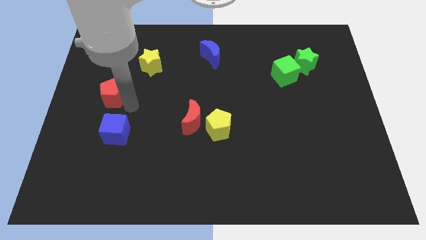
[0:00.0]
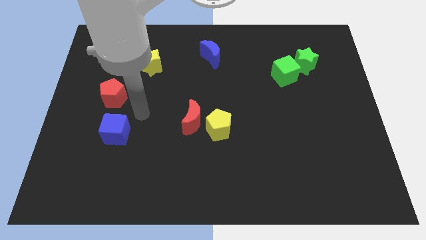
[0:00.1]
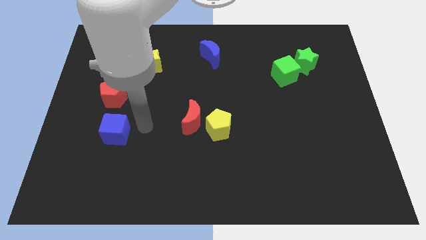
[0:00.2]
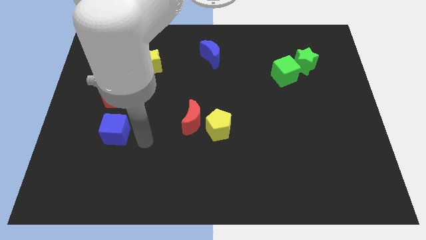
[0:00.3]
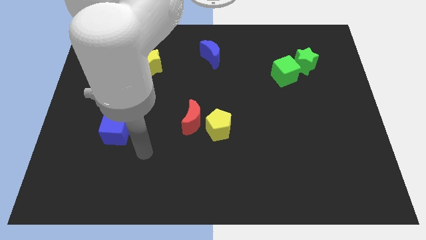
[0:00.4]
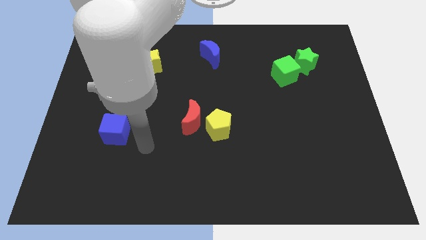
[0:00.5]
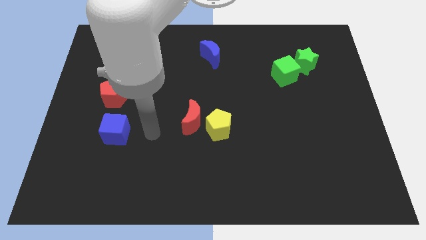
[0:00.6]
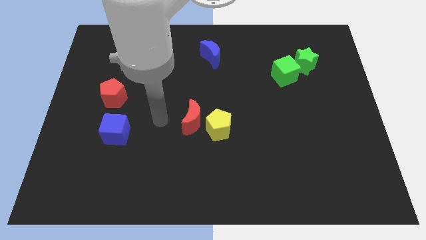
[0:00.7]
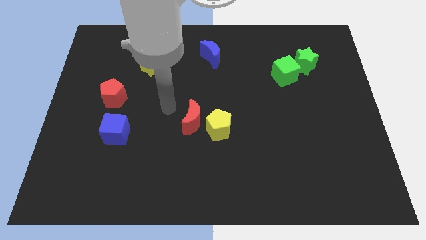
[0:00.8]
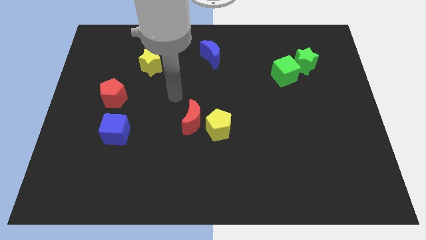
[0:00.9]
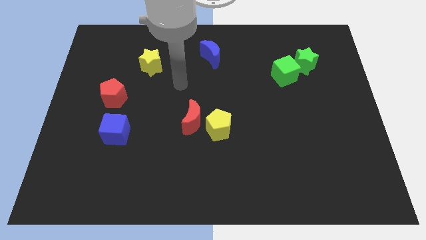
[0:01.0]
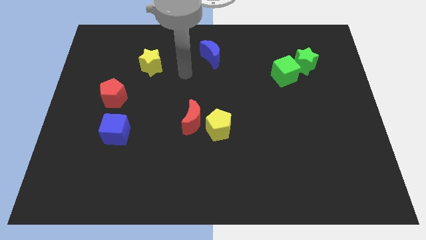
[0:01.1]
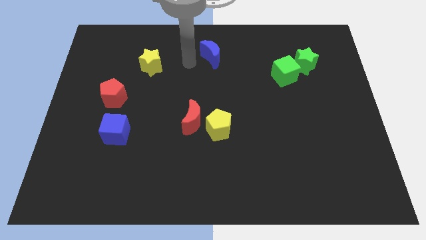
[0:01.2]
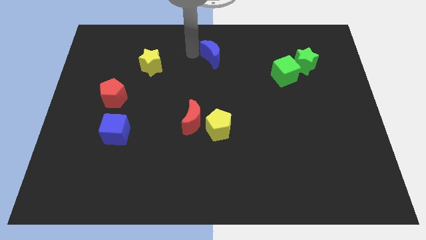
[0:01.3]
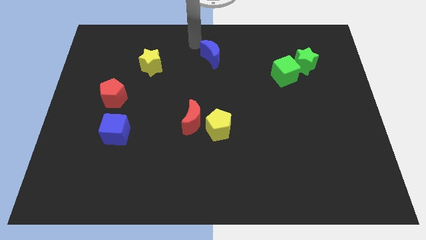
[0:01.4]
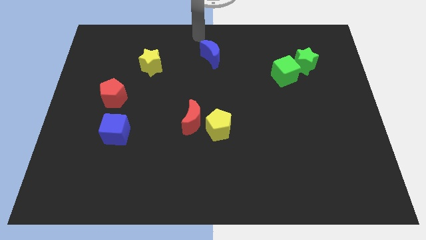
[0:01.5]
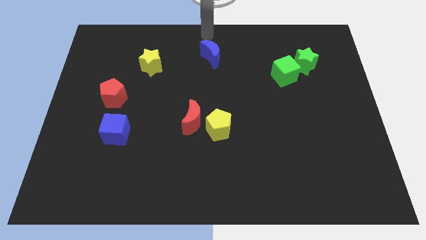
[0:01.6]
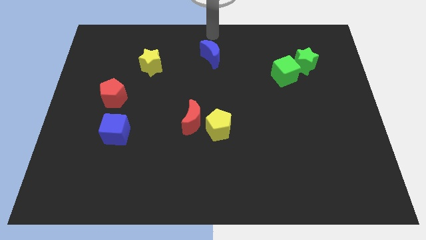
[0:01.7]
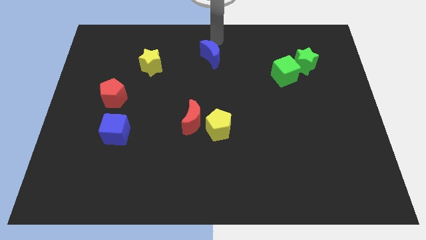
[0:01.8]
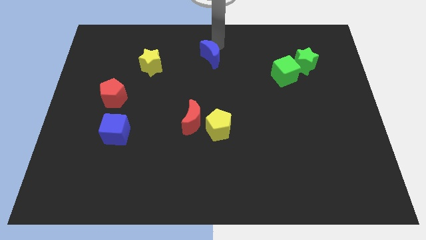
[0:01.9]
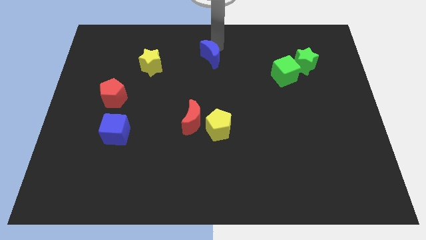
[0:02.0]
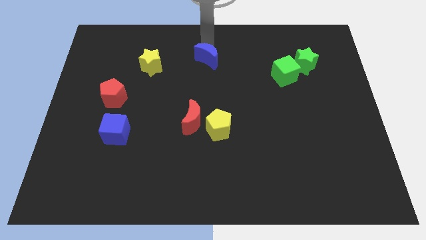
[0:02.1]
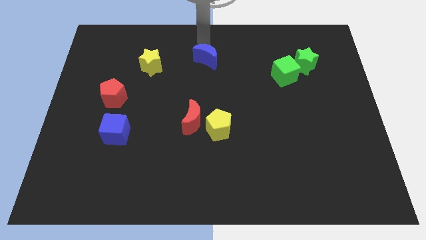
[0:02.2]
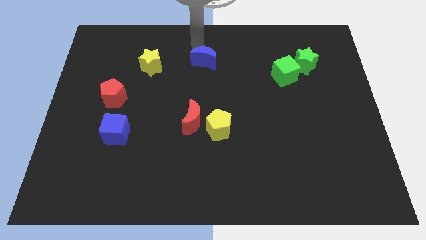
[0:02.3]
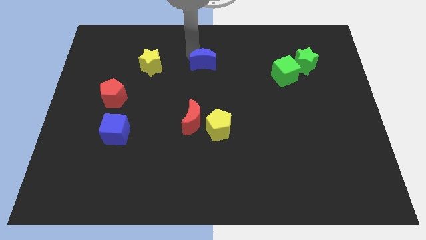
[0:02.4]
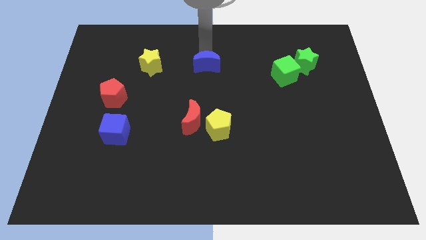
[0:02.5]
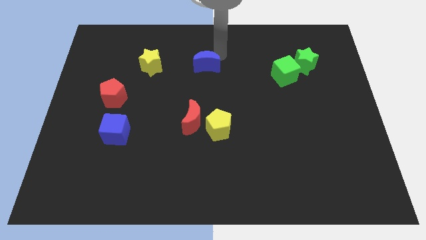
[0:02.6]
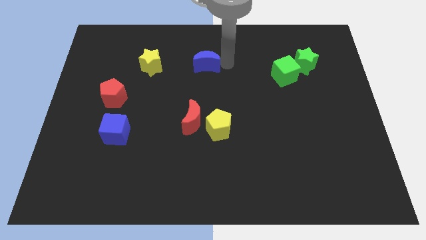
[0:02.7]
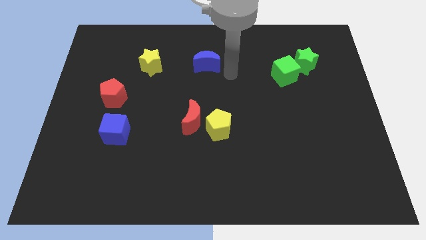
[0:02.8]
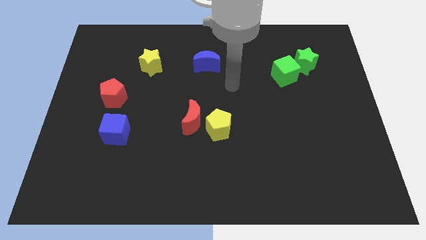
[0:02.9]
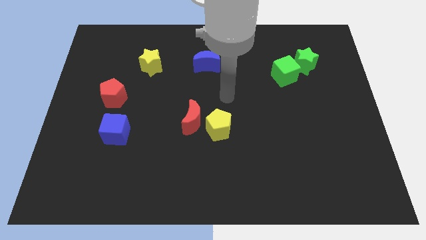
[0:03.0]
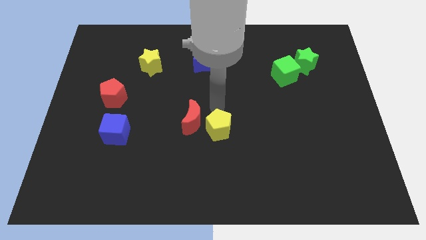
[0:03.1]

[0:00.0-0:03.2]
slide the blue crescent slightly towards down

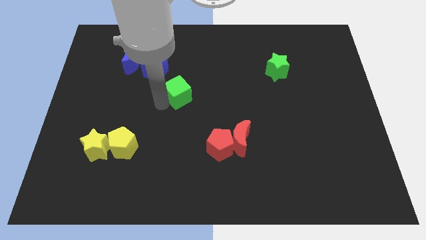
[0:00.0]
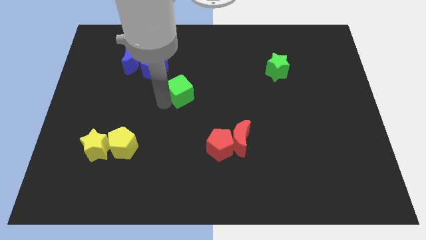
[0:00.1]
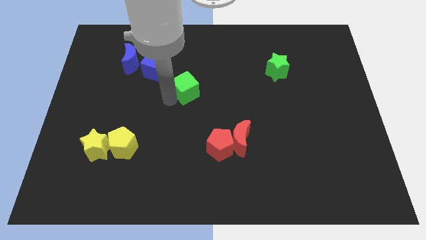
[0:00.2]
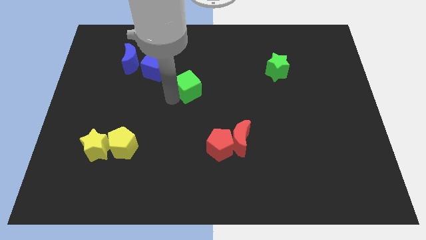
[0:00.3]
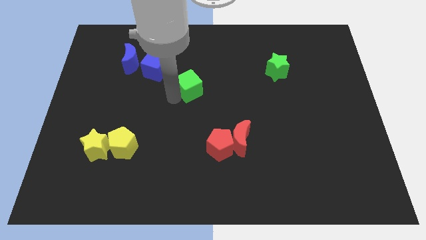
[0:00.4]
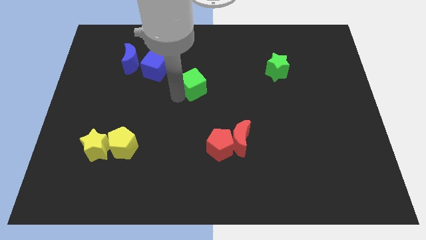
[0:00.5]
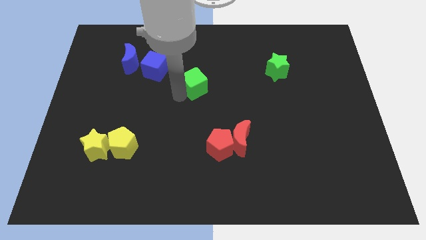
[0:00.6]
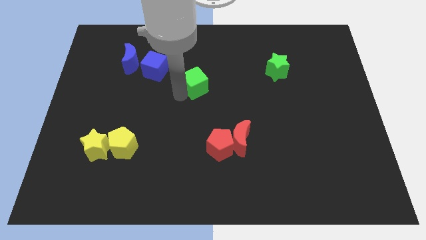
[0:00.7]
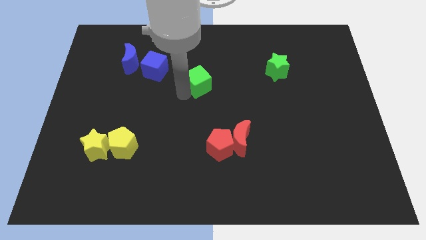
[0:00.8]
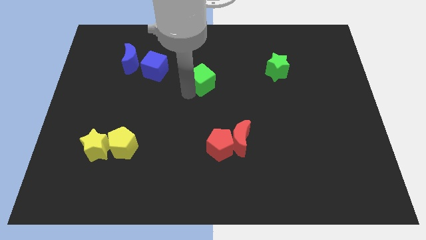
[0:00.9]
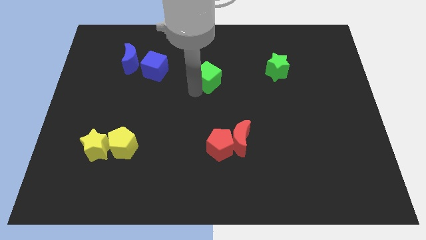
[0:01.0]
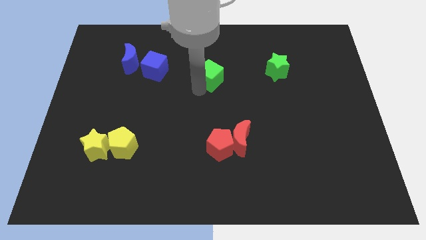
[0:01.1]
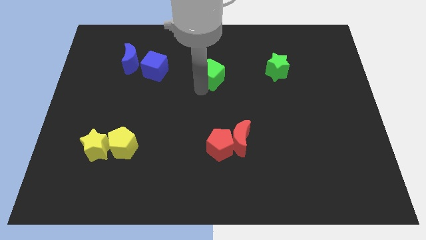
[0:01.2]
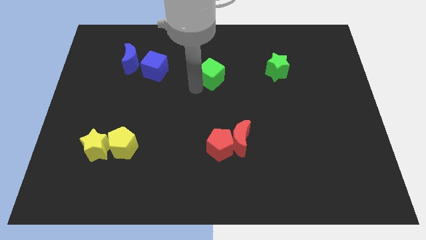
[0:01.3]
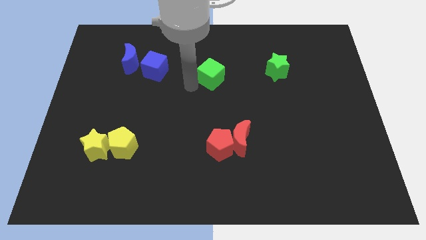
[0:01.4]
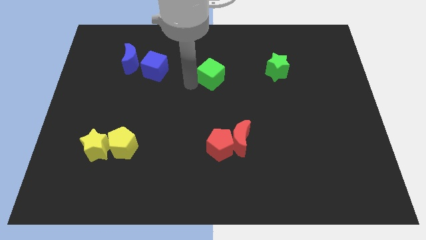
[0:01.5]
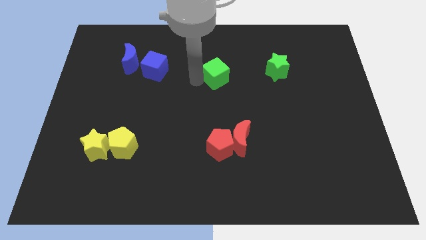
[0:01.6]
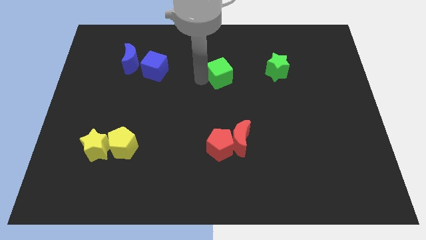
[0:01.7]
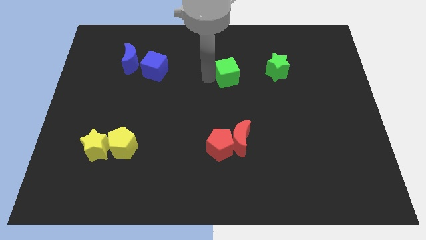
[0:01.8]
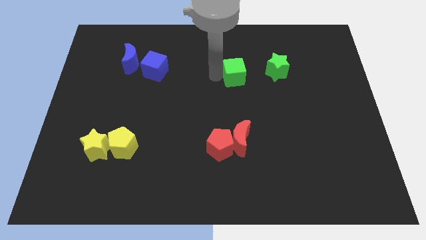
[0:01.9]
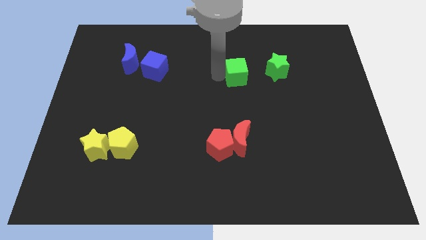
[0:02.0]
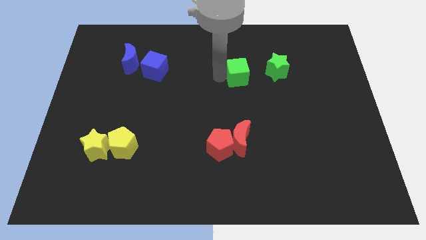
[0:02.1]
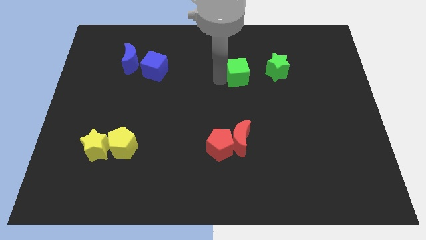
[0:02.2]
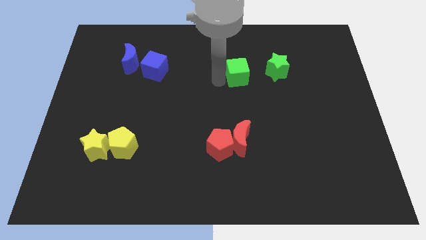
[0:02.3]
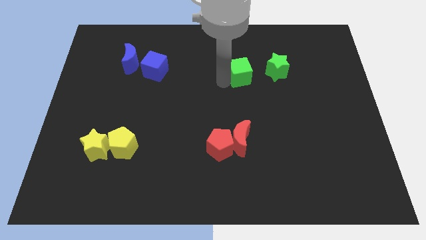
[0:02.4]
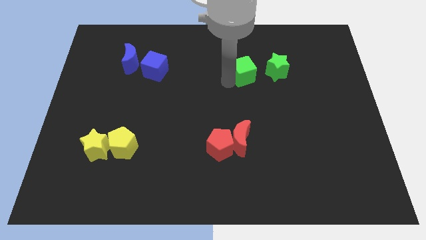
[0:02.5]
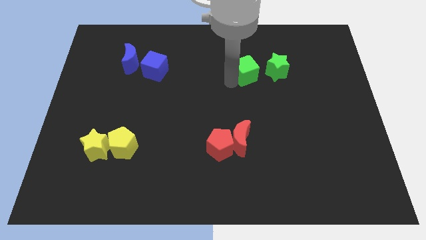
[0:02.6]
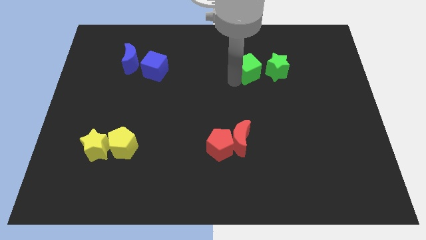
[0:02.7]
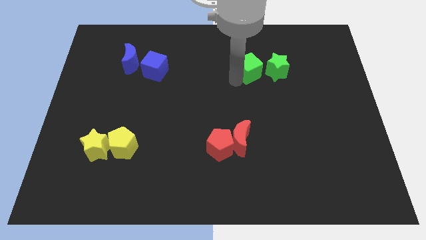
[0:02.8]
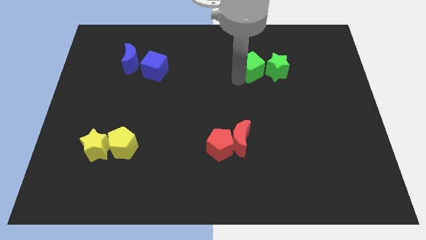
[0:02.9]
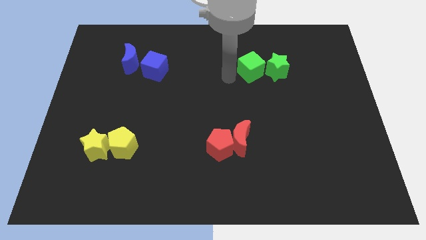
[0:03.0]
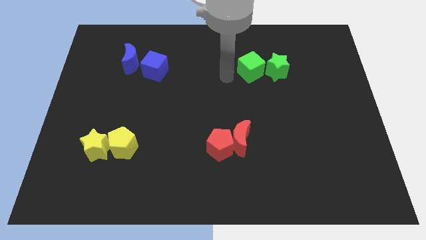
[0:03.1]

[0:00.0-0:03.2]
move the green cube to the left of green star

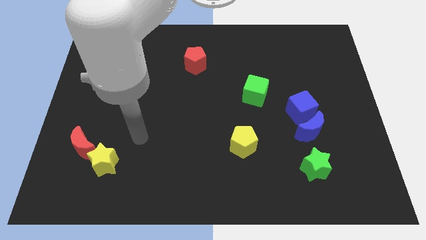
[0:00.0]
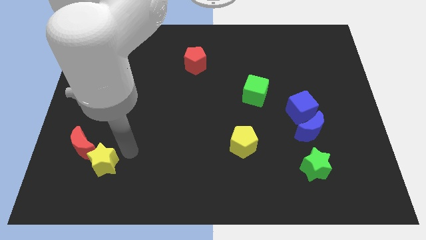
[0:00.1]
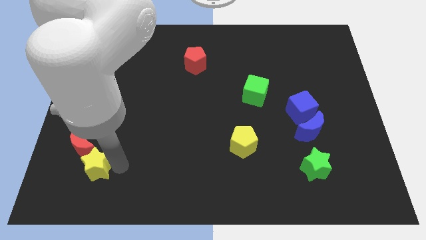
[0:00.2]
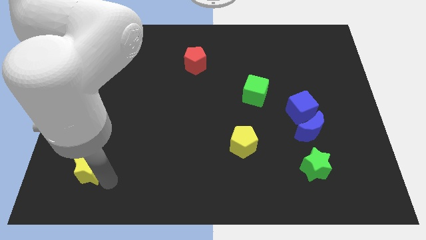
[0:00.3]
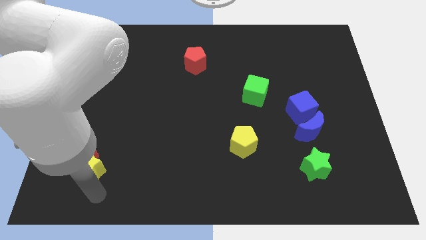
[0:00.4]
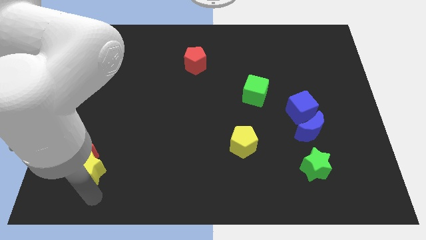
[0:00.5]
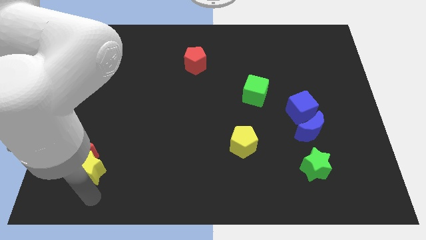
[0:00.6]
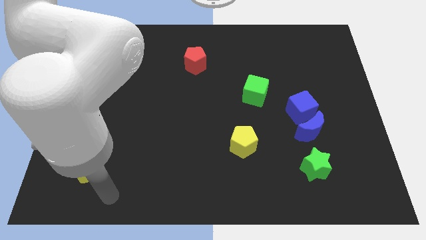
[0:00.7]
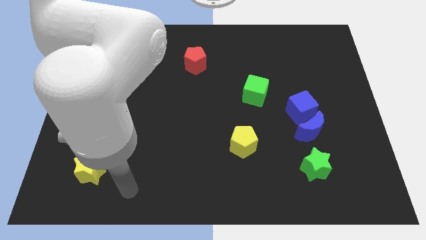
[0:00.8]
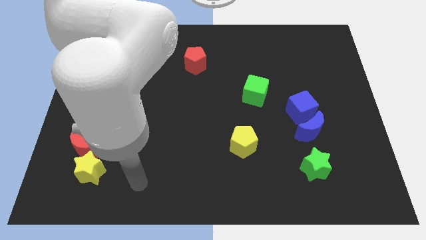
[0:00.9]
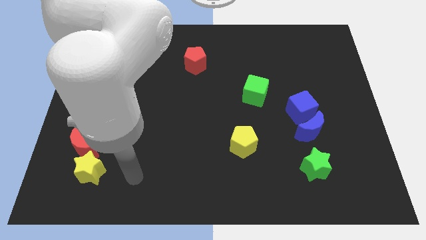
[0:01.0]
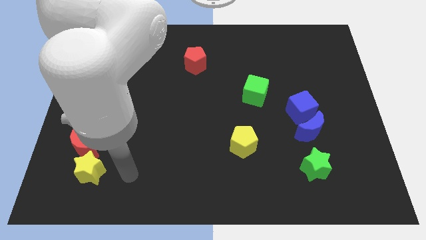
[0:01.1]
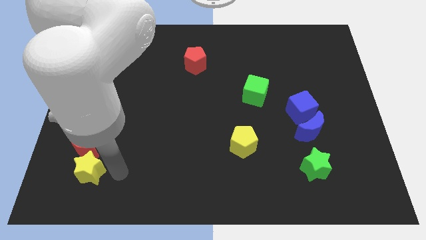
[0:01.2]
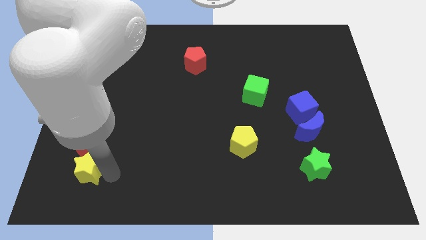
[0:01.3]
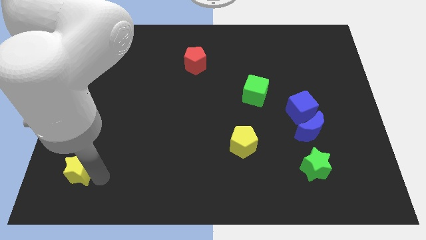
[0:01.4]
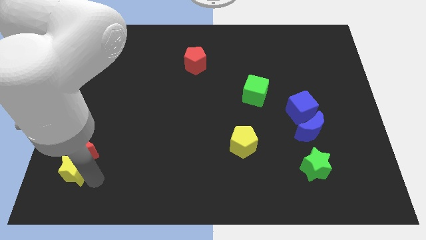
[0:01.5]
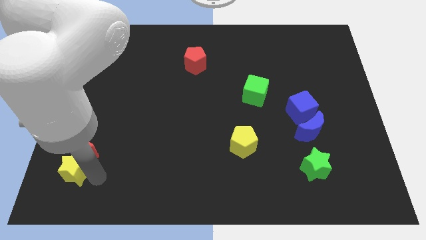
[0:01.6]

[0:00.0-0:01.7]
slightly move the yellow star to the left side of the board

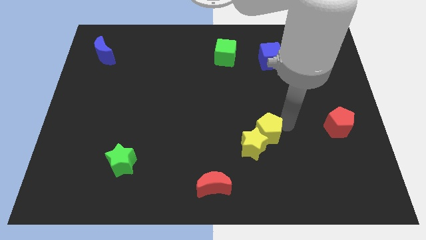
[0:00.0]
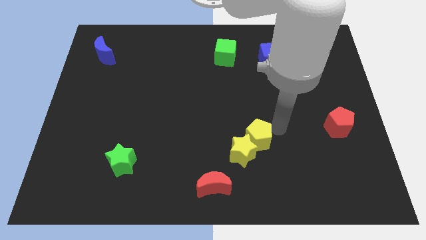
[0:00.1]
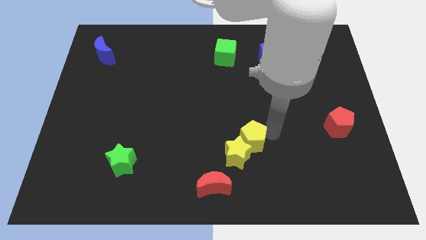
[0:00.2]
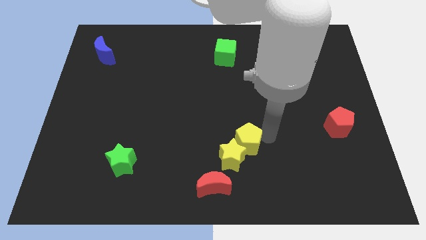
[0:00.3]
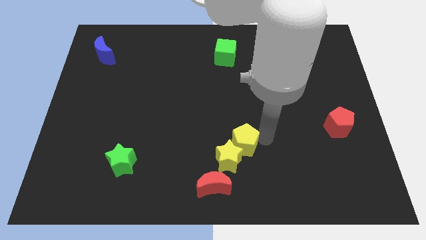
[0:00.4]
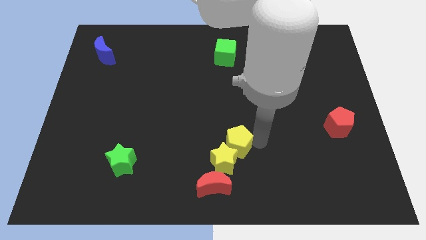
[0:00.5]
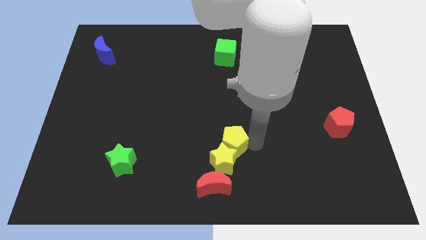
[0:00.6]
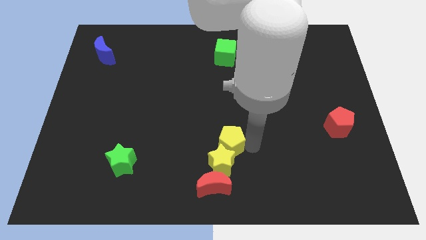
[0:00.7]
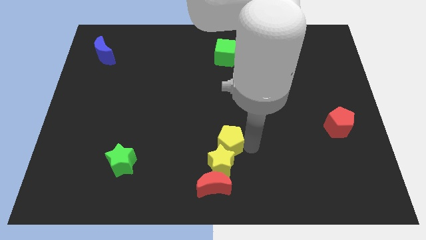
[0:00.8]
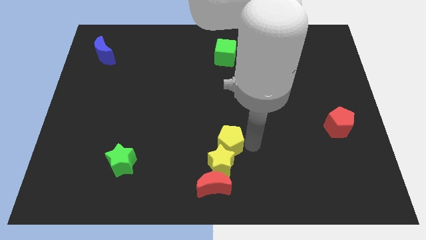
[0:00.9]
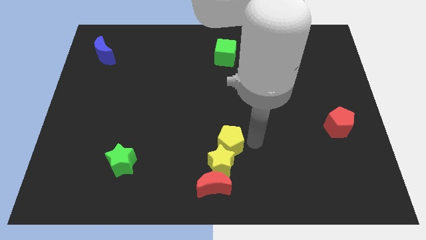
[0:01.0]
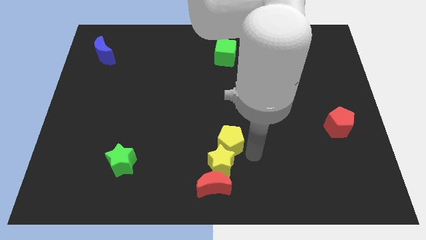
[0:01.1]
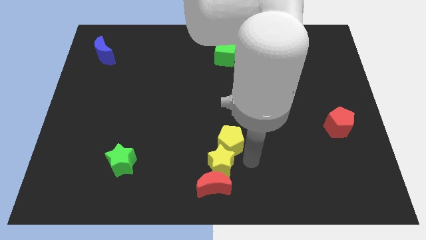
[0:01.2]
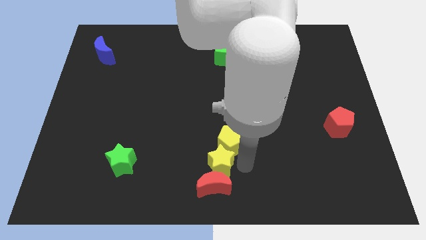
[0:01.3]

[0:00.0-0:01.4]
place the yellow star and yellow pentagon to the top of red crescent
